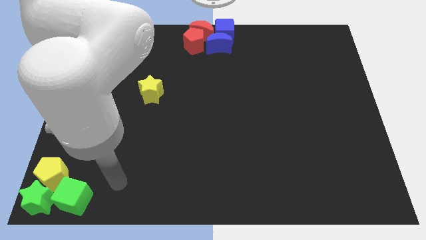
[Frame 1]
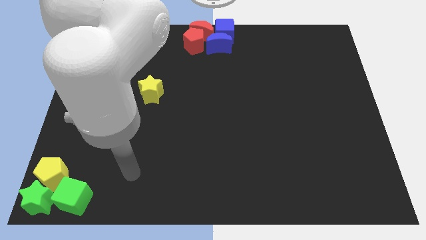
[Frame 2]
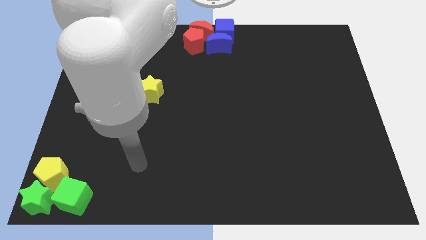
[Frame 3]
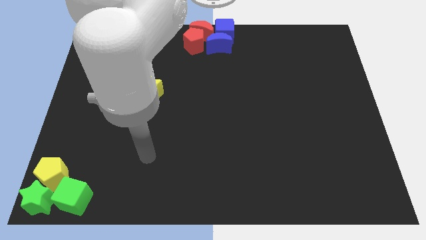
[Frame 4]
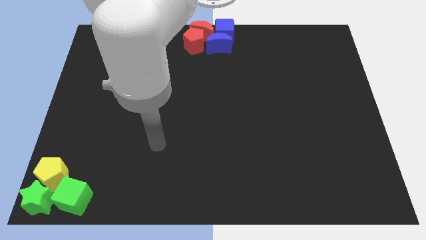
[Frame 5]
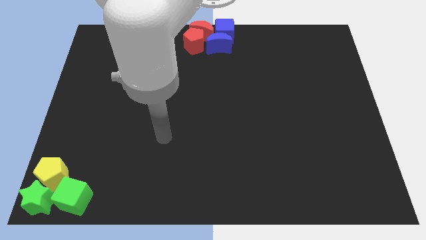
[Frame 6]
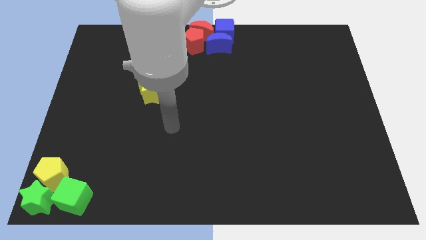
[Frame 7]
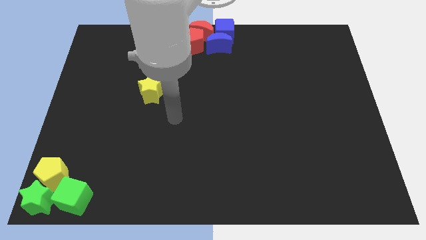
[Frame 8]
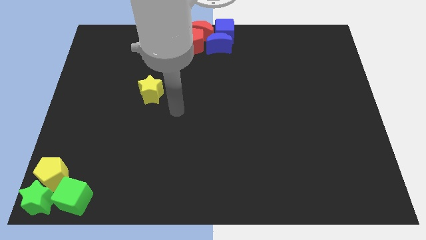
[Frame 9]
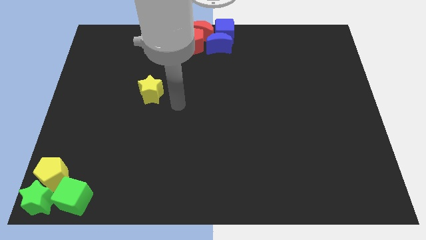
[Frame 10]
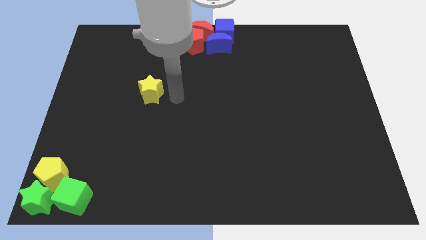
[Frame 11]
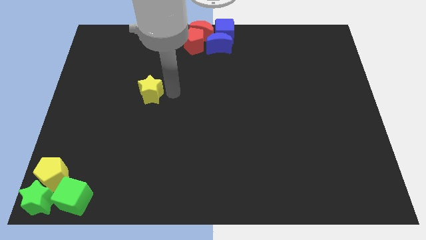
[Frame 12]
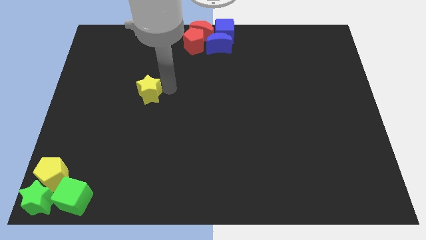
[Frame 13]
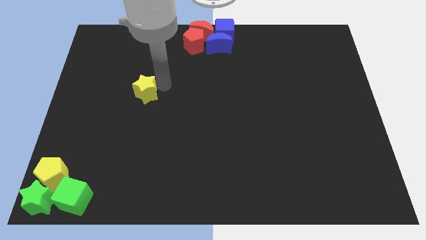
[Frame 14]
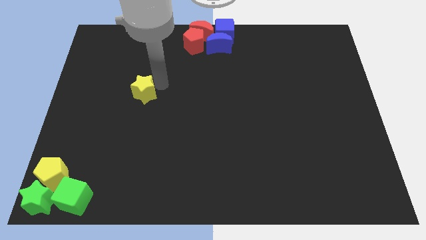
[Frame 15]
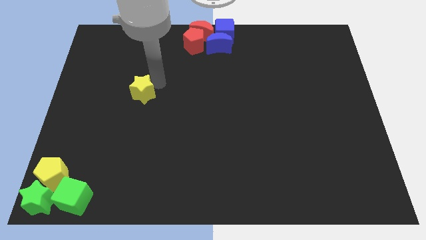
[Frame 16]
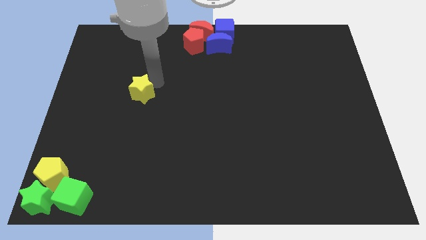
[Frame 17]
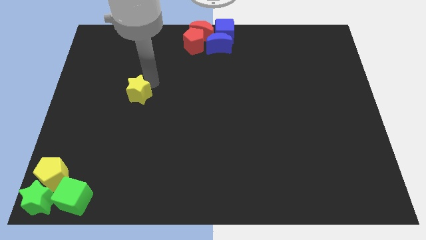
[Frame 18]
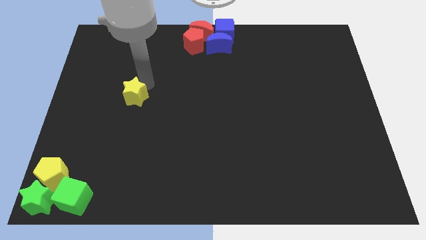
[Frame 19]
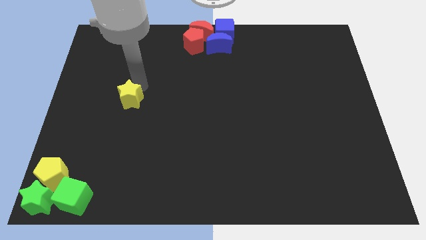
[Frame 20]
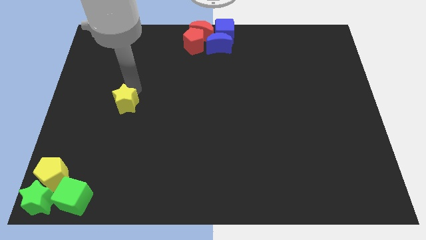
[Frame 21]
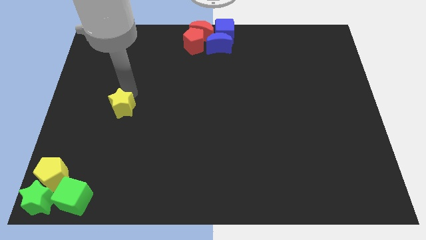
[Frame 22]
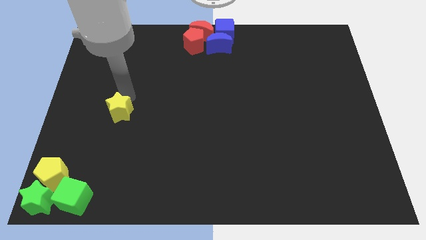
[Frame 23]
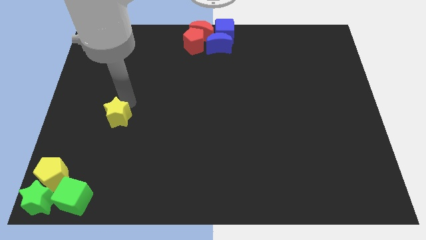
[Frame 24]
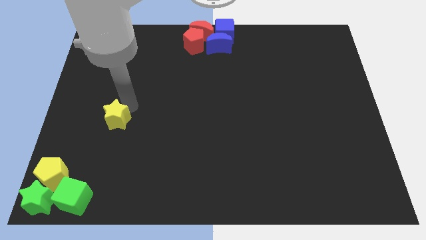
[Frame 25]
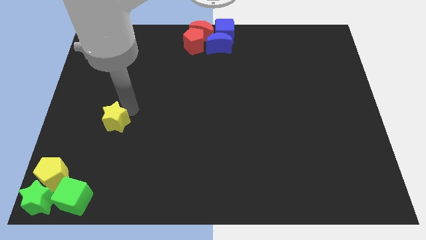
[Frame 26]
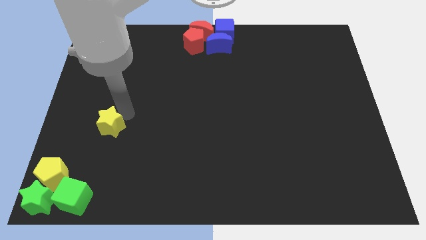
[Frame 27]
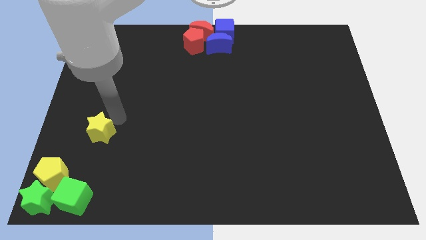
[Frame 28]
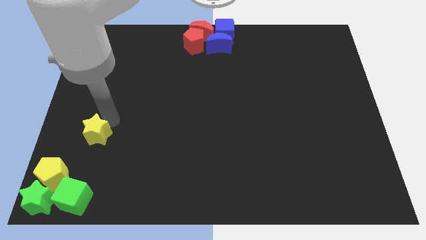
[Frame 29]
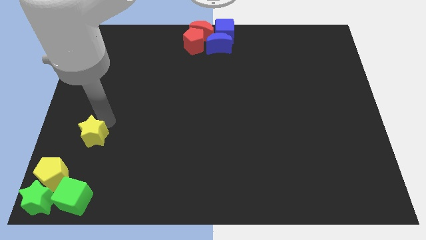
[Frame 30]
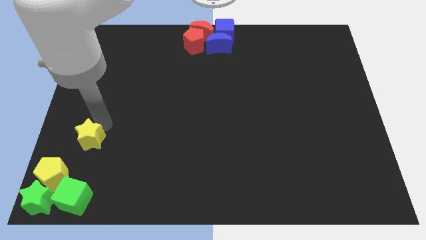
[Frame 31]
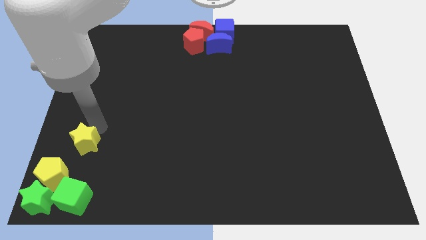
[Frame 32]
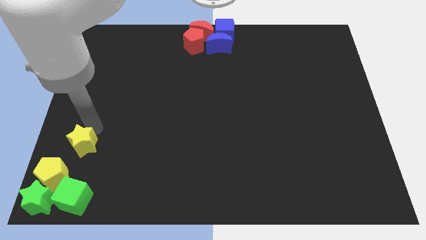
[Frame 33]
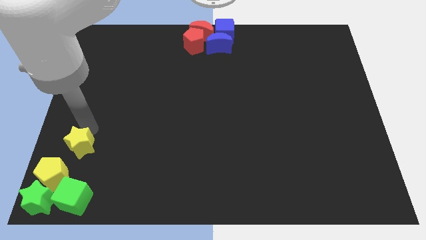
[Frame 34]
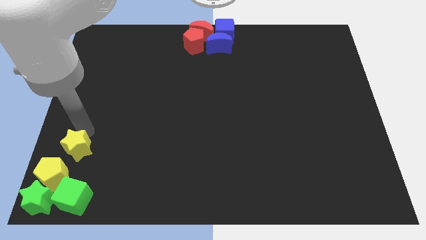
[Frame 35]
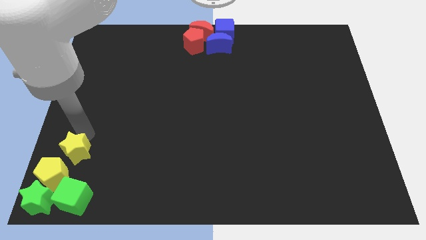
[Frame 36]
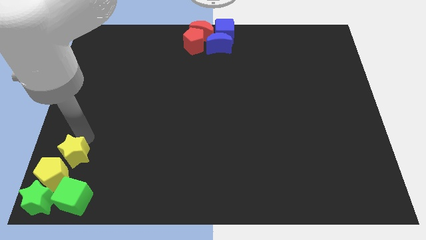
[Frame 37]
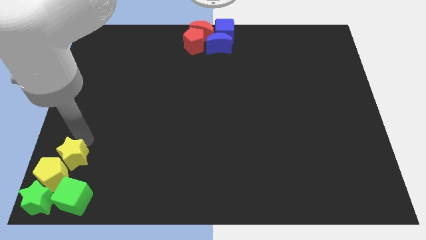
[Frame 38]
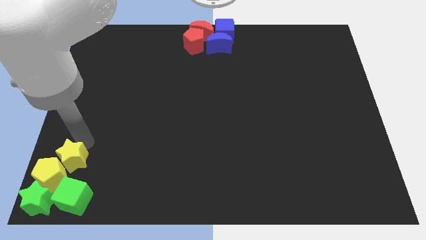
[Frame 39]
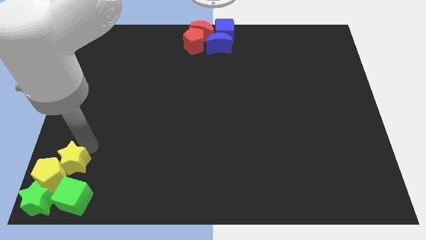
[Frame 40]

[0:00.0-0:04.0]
push the yellow star into yellow pentagon

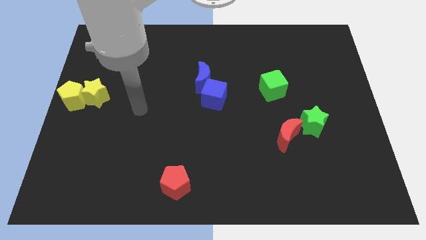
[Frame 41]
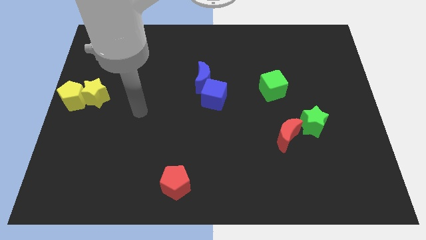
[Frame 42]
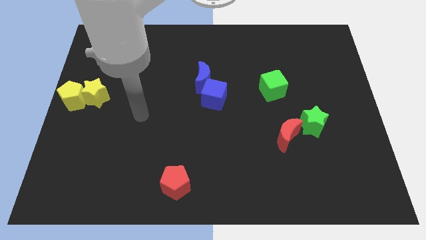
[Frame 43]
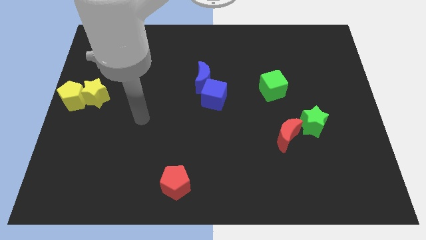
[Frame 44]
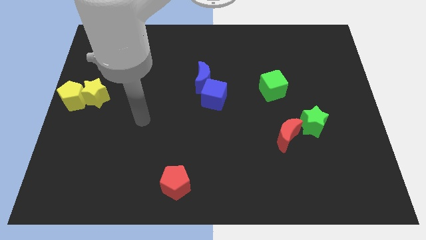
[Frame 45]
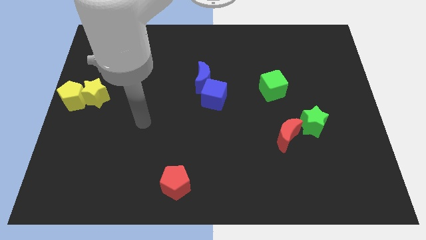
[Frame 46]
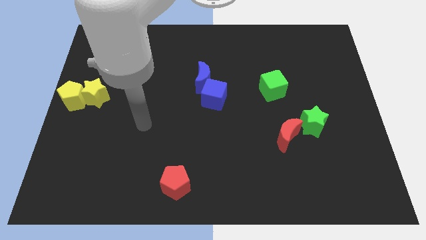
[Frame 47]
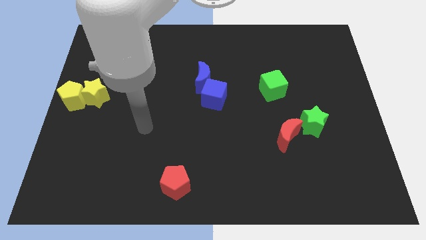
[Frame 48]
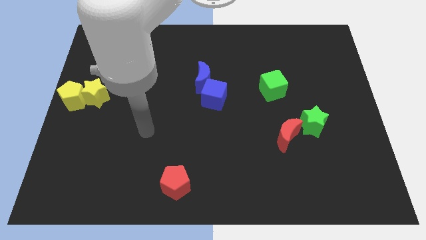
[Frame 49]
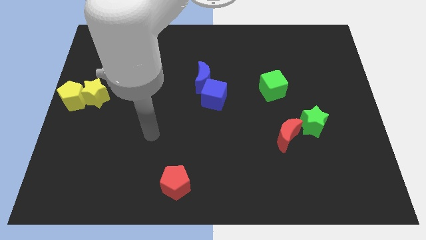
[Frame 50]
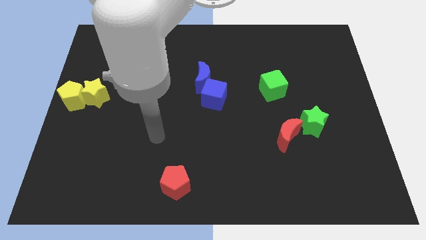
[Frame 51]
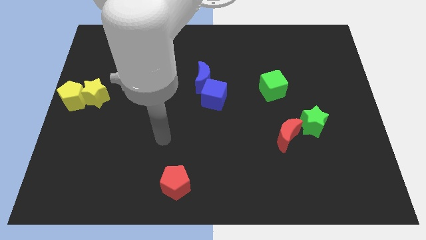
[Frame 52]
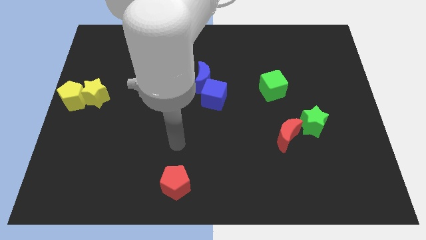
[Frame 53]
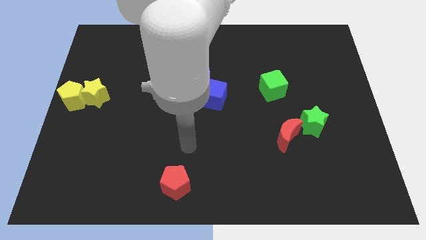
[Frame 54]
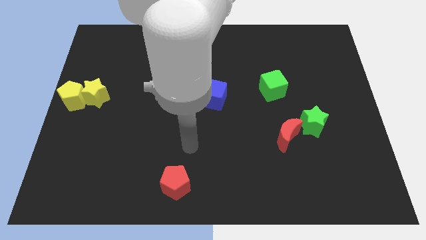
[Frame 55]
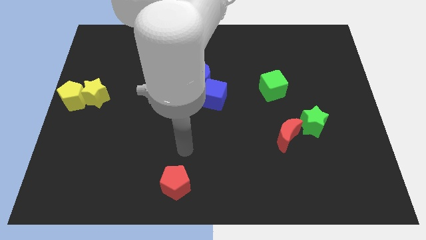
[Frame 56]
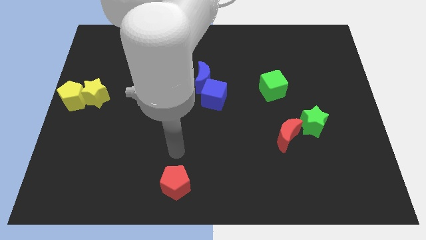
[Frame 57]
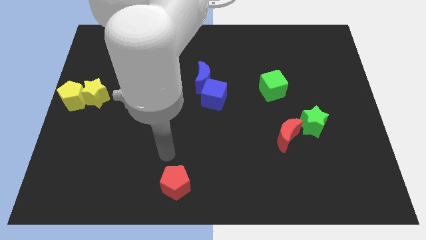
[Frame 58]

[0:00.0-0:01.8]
point the arm on top of the red pentagon

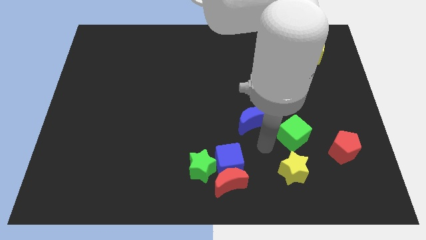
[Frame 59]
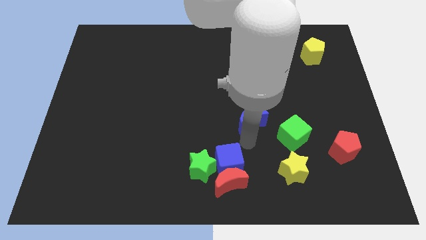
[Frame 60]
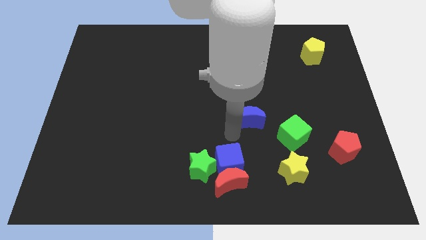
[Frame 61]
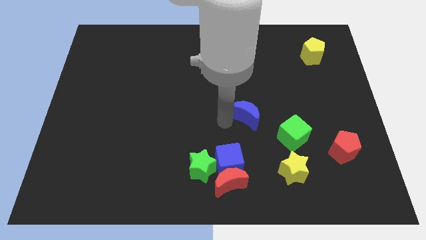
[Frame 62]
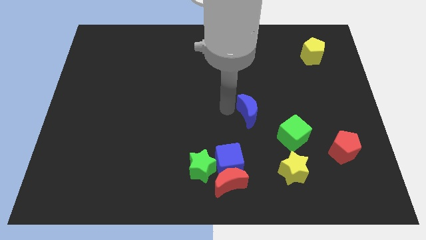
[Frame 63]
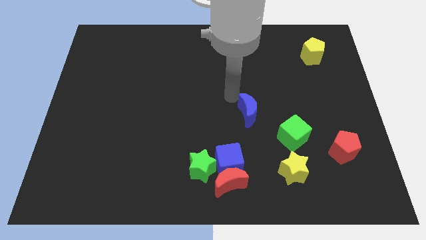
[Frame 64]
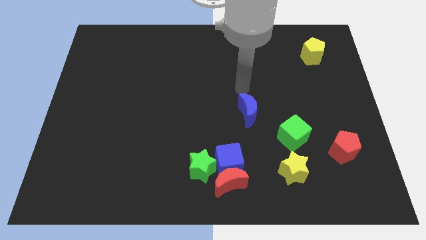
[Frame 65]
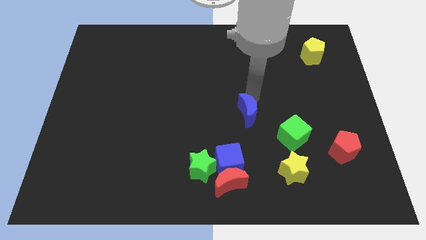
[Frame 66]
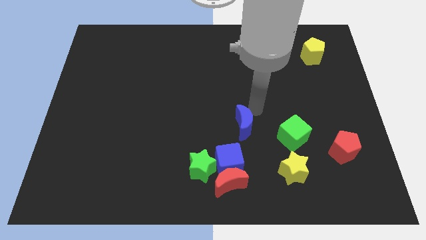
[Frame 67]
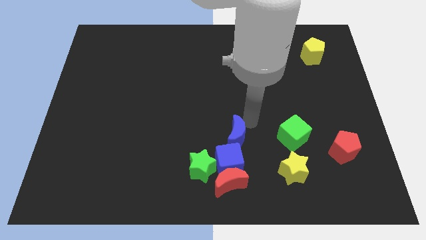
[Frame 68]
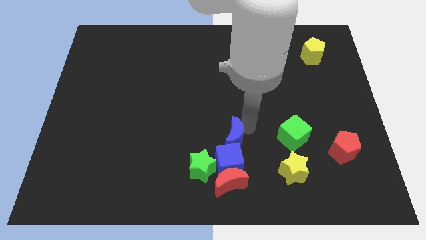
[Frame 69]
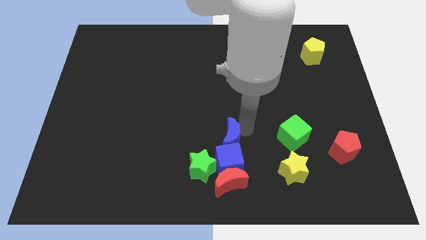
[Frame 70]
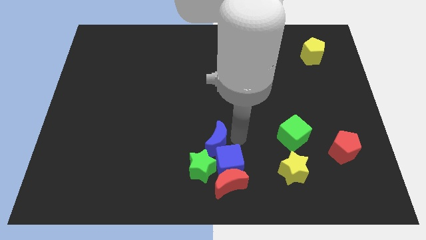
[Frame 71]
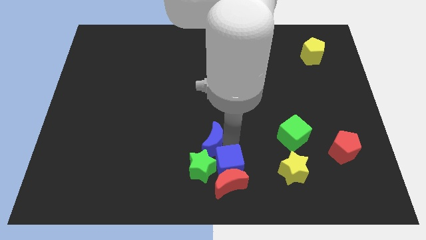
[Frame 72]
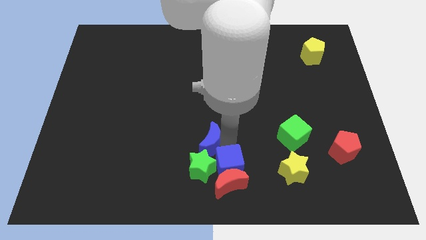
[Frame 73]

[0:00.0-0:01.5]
move the blue moon to the top of the green star

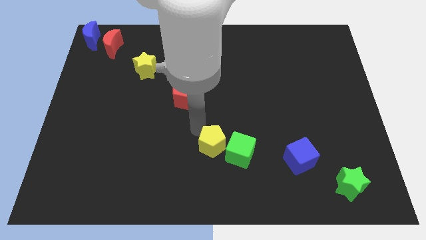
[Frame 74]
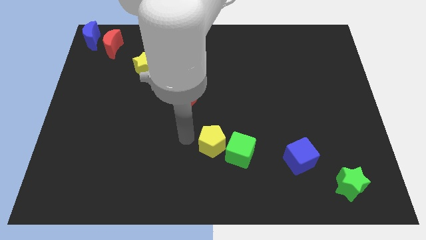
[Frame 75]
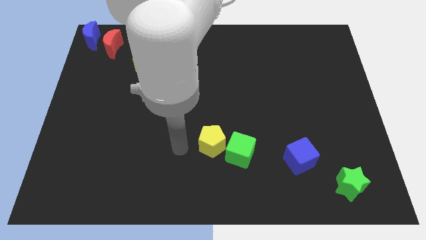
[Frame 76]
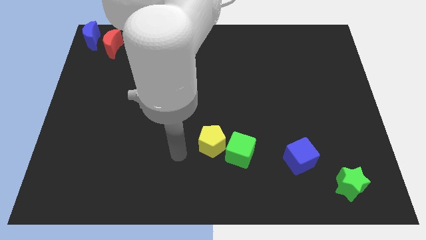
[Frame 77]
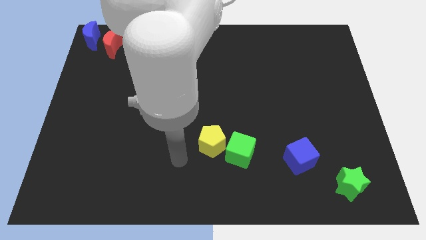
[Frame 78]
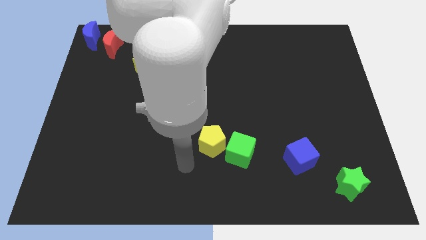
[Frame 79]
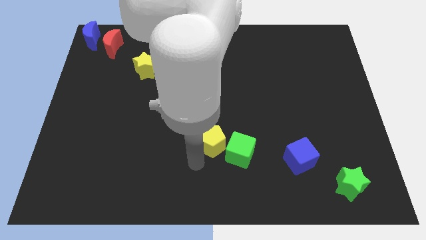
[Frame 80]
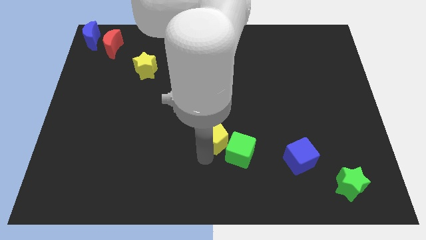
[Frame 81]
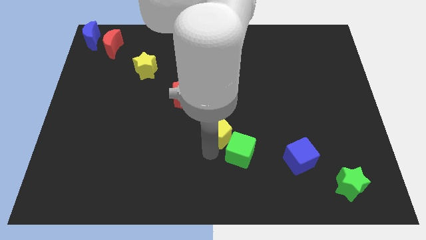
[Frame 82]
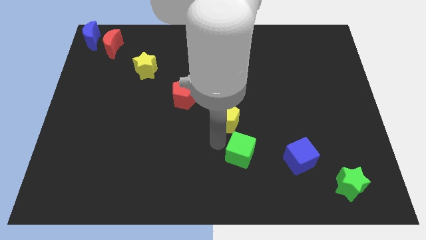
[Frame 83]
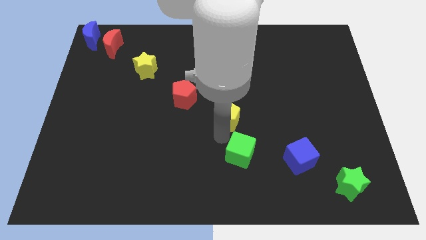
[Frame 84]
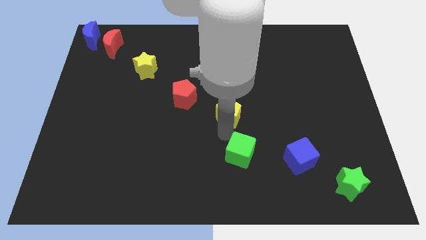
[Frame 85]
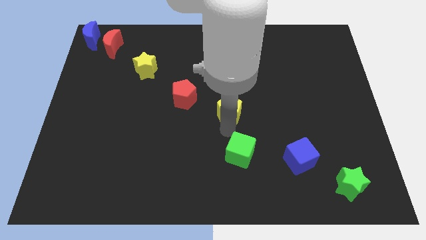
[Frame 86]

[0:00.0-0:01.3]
put the yellow pentagon above the green cube

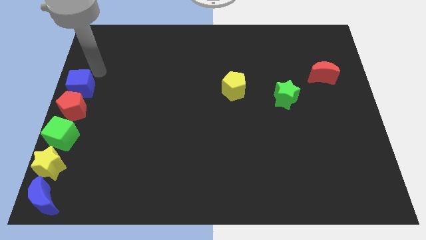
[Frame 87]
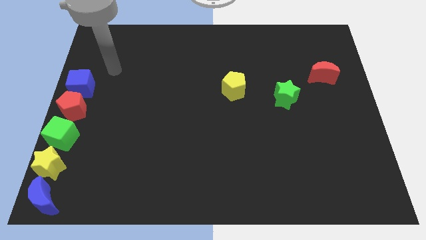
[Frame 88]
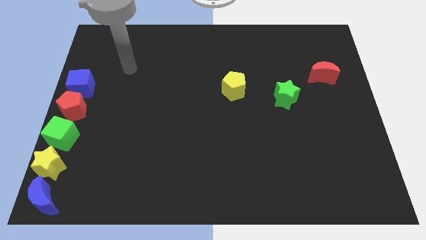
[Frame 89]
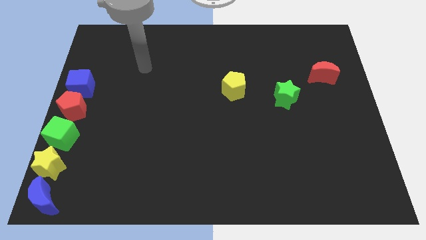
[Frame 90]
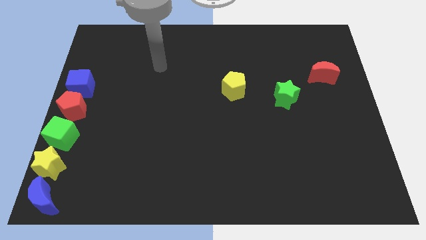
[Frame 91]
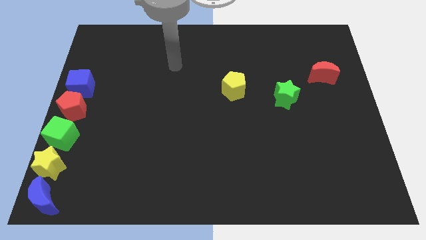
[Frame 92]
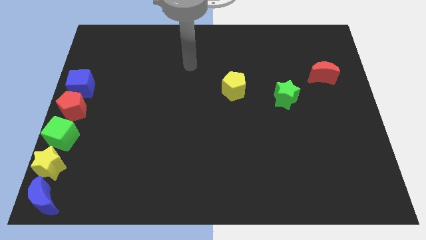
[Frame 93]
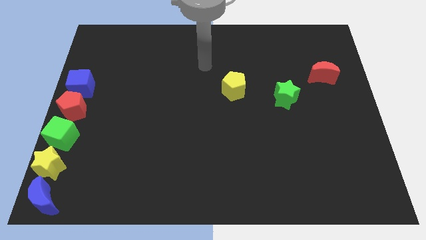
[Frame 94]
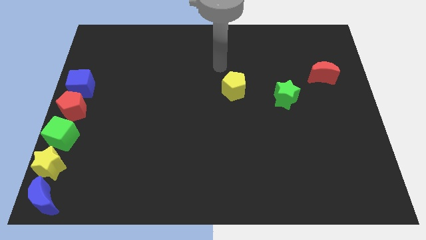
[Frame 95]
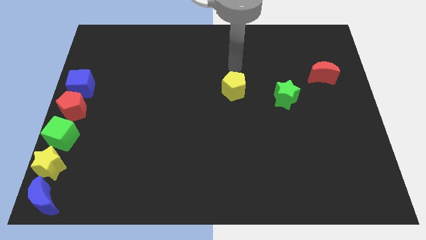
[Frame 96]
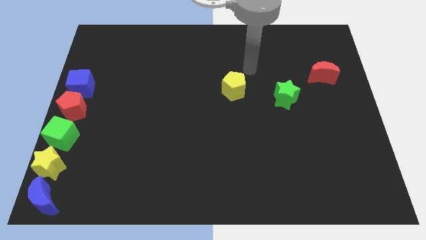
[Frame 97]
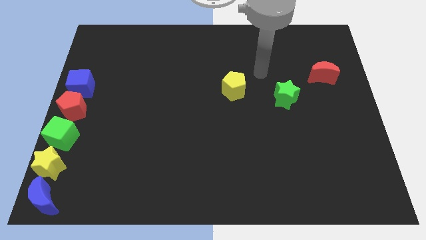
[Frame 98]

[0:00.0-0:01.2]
move your arm away from blue cube
